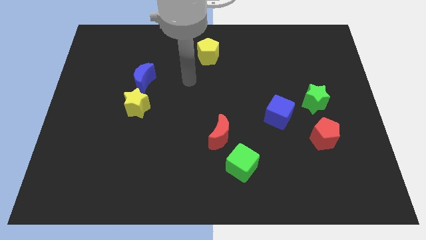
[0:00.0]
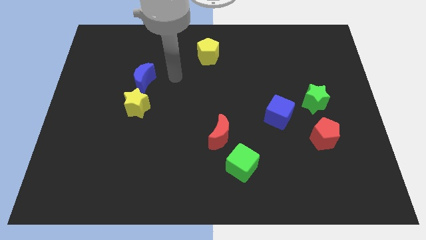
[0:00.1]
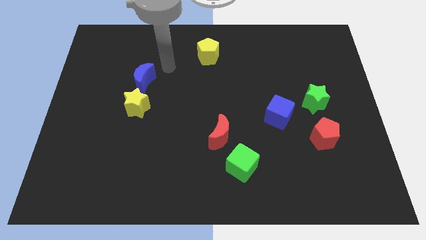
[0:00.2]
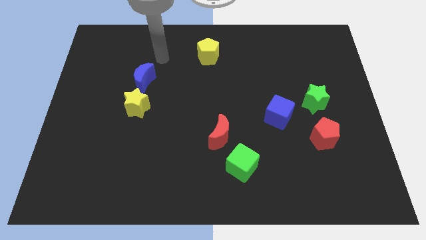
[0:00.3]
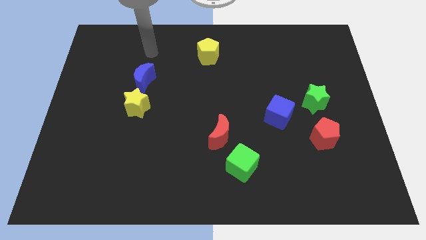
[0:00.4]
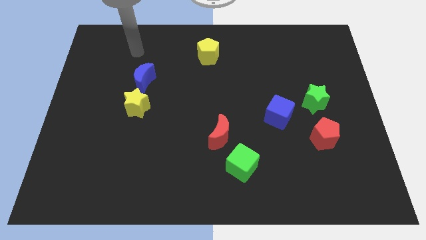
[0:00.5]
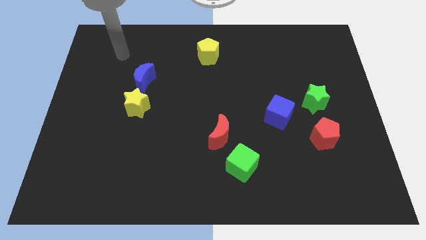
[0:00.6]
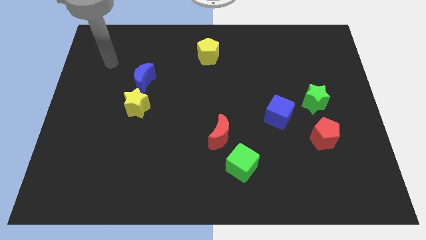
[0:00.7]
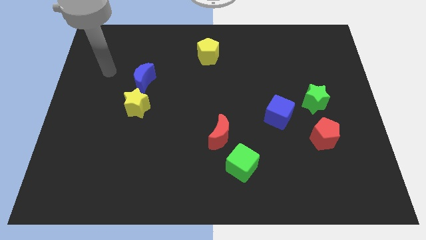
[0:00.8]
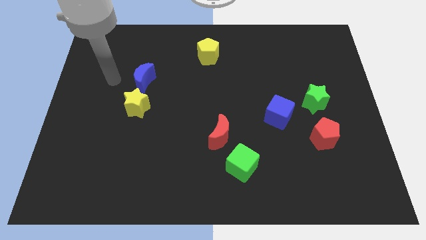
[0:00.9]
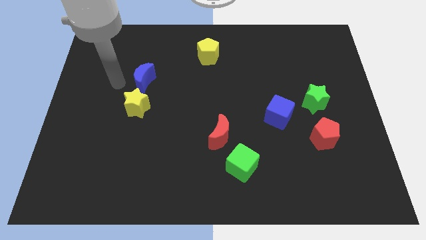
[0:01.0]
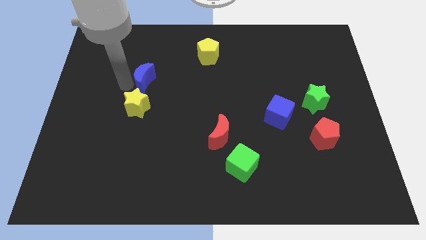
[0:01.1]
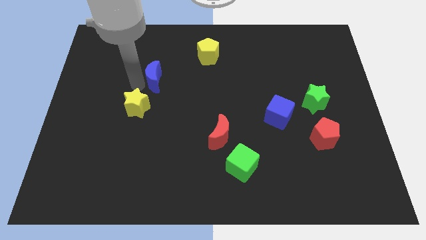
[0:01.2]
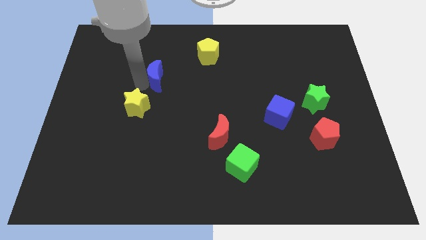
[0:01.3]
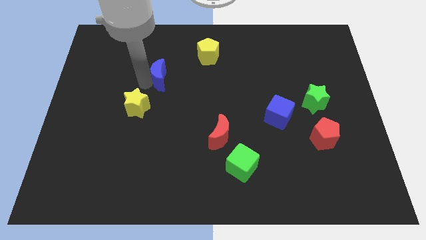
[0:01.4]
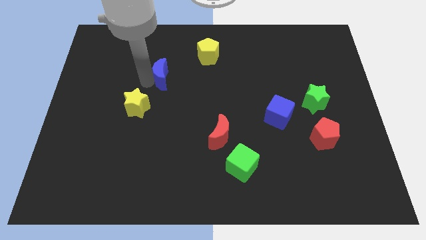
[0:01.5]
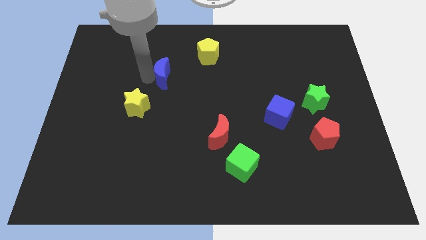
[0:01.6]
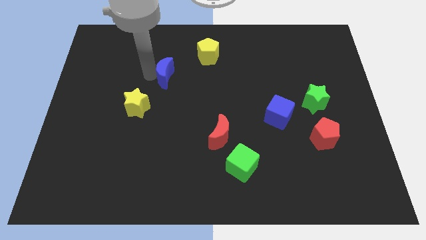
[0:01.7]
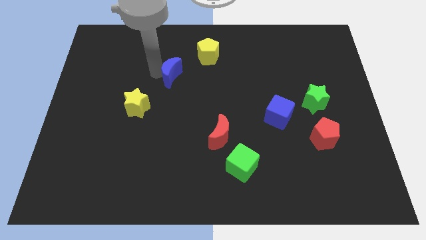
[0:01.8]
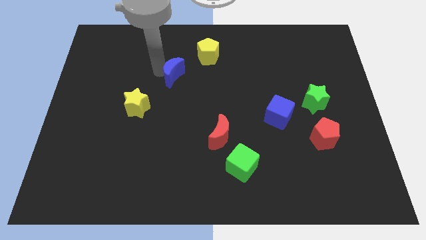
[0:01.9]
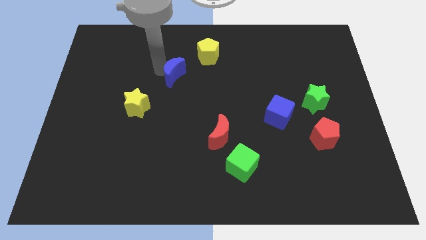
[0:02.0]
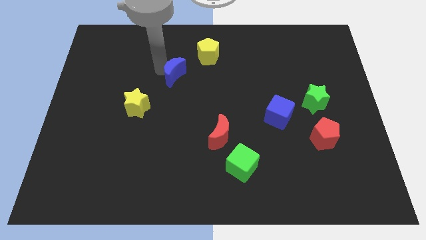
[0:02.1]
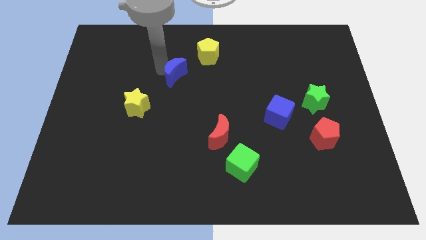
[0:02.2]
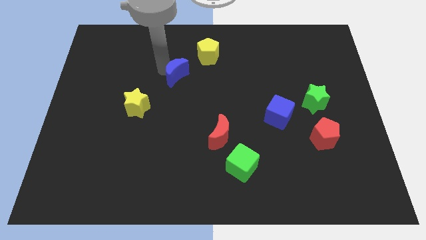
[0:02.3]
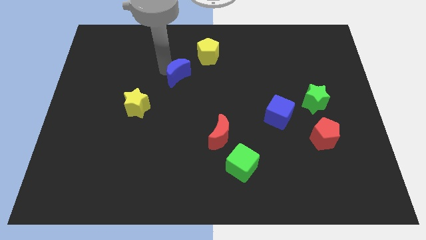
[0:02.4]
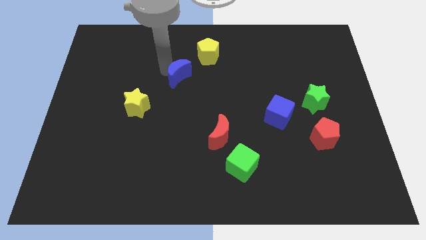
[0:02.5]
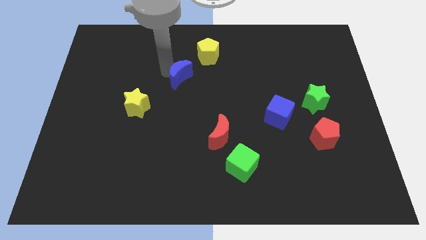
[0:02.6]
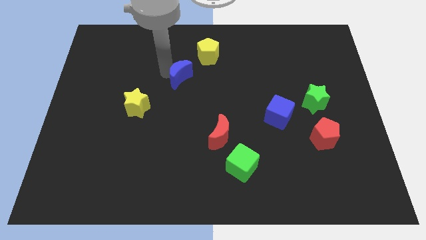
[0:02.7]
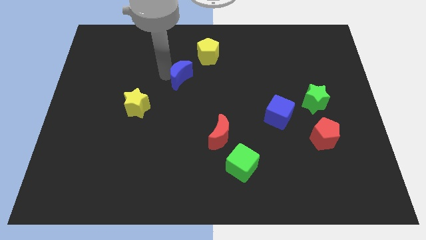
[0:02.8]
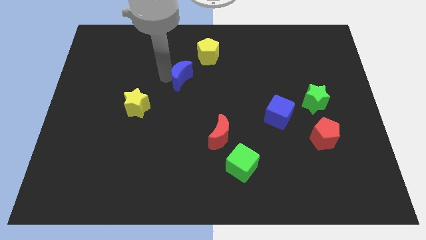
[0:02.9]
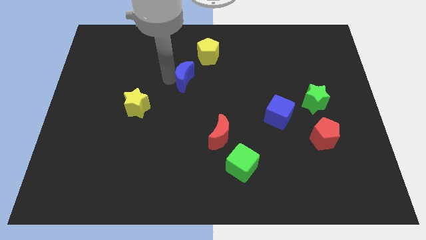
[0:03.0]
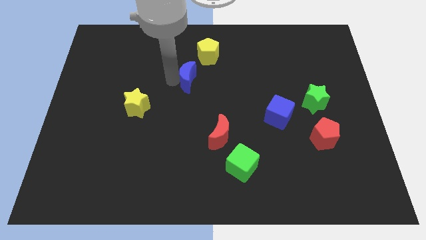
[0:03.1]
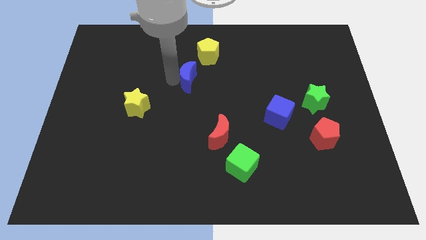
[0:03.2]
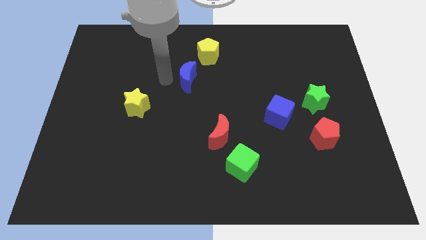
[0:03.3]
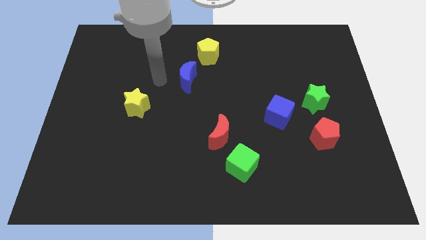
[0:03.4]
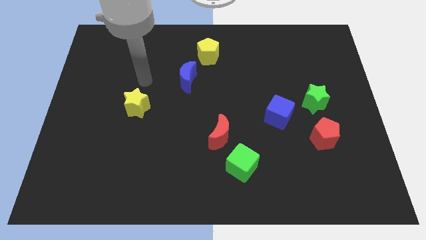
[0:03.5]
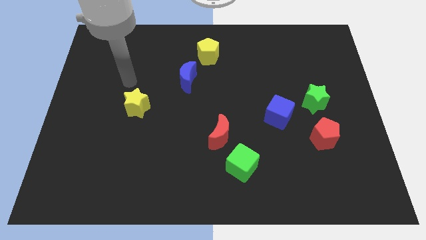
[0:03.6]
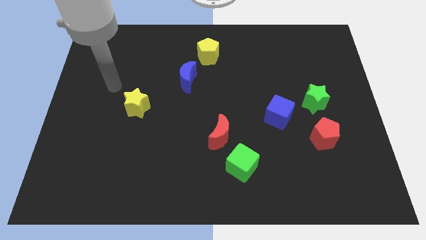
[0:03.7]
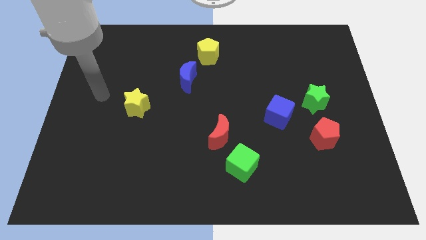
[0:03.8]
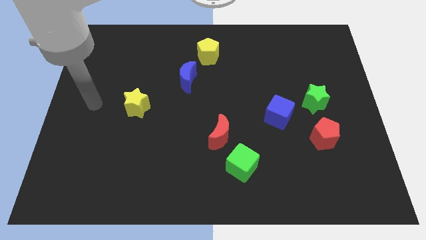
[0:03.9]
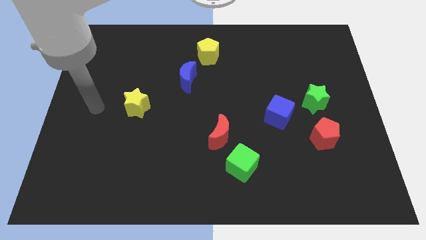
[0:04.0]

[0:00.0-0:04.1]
side the blue crescent diagonally top right the yellow star

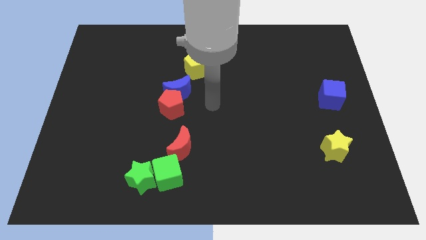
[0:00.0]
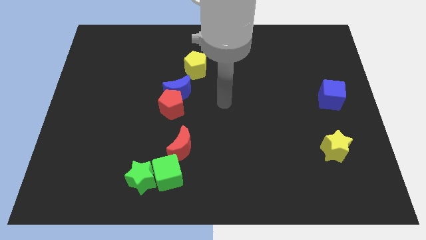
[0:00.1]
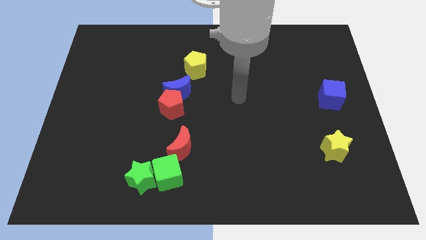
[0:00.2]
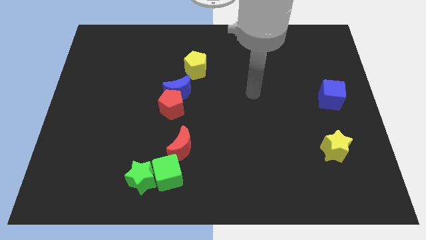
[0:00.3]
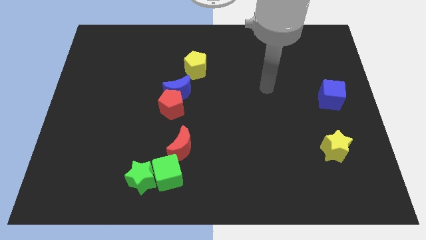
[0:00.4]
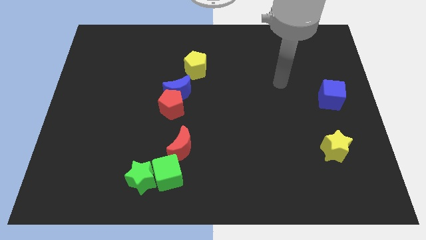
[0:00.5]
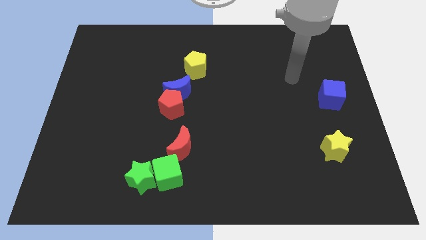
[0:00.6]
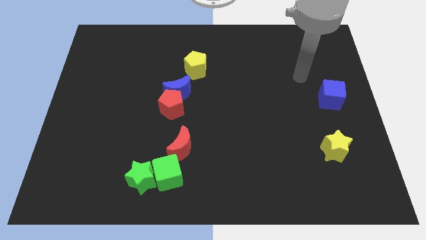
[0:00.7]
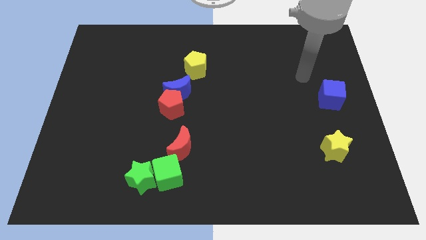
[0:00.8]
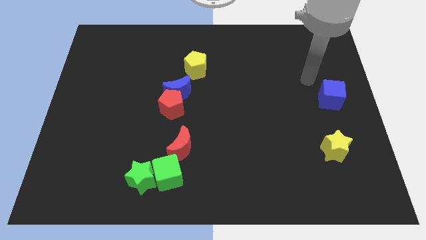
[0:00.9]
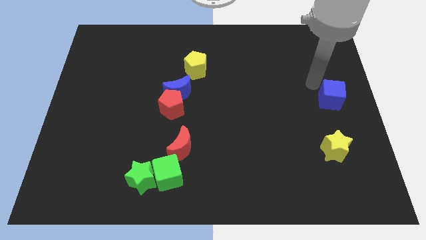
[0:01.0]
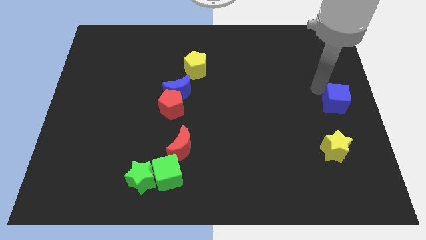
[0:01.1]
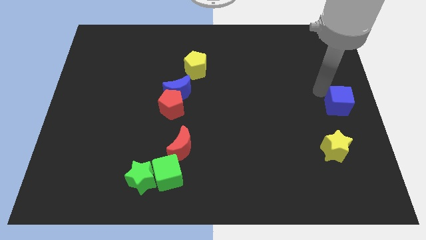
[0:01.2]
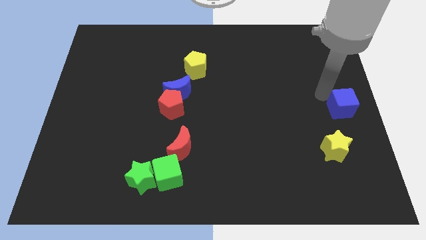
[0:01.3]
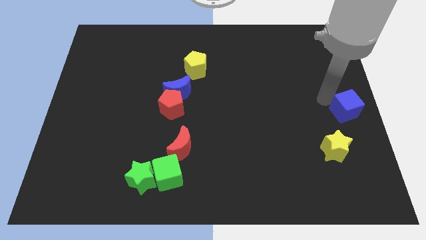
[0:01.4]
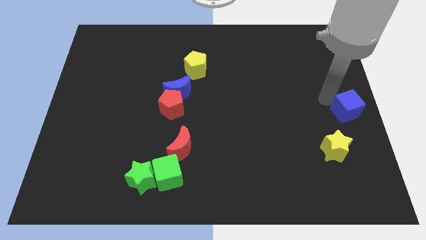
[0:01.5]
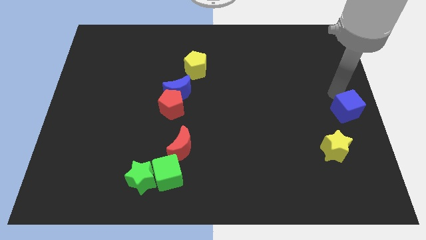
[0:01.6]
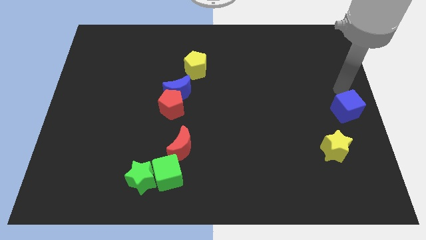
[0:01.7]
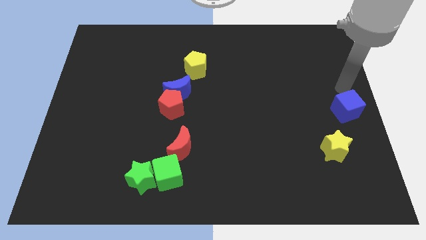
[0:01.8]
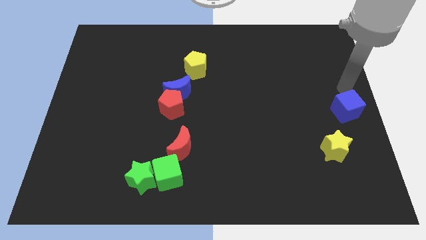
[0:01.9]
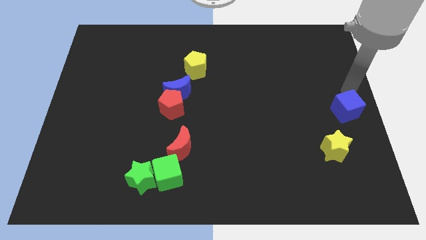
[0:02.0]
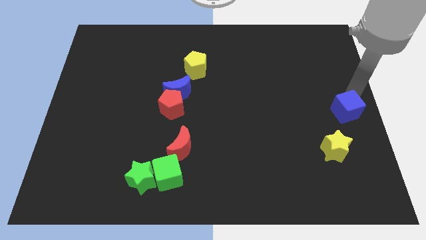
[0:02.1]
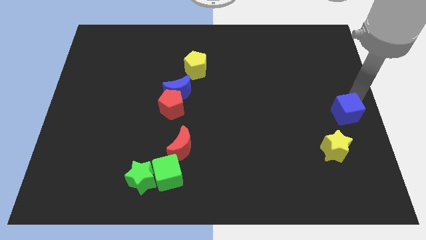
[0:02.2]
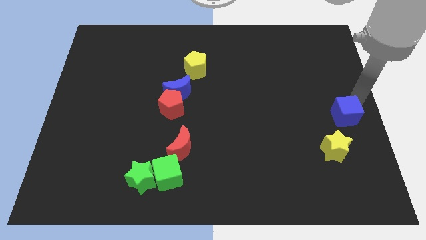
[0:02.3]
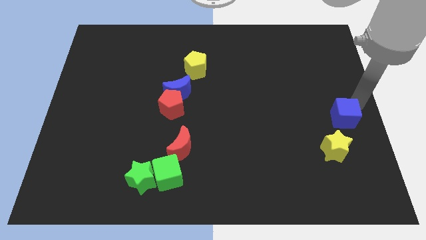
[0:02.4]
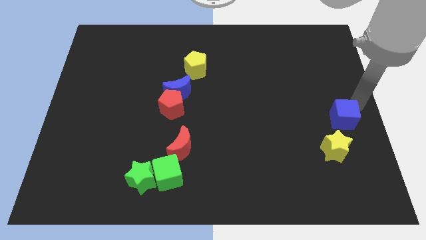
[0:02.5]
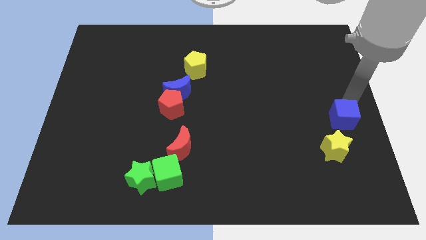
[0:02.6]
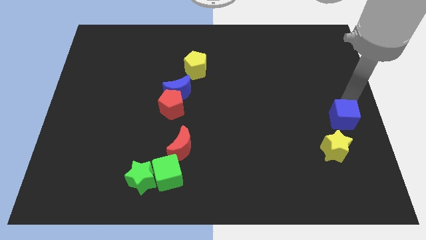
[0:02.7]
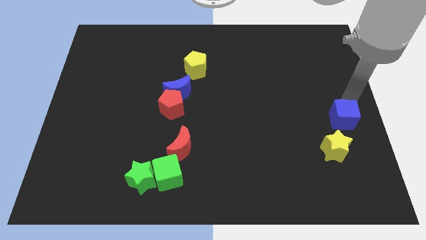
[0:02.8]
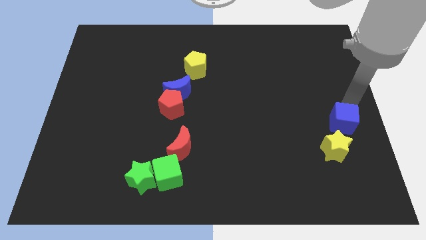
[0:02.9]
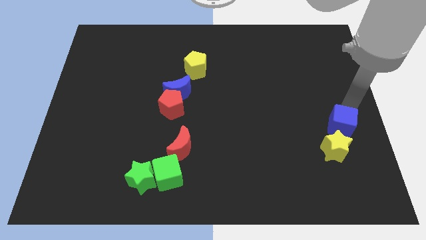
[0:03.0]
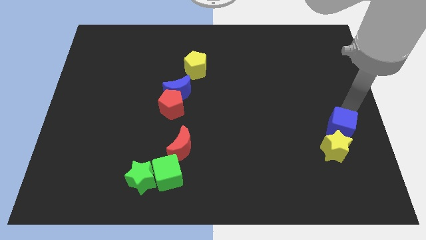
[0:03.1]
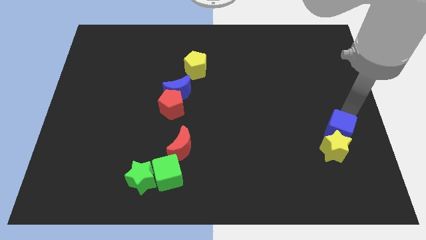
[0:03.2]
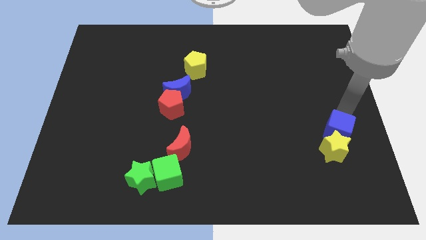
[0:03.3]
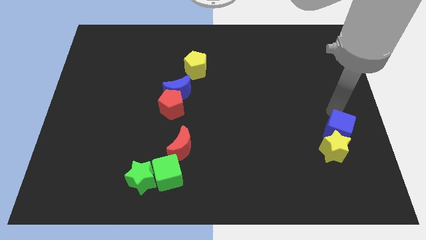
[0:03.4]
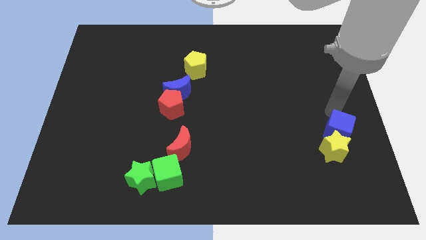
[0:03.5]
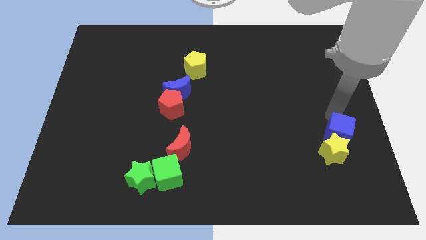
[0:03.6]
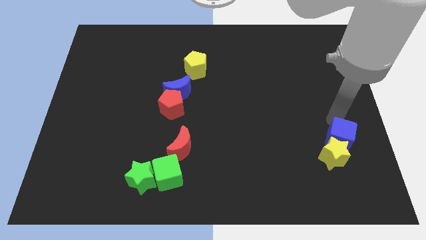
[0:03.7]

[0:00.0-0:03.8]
push the blue cube into the yellow star

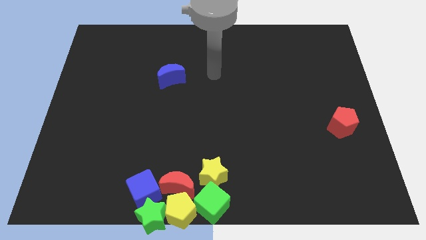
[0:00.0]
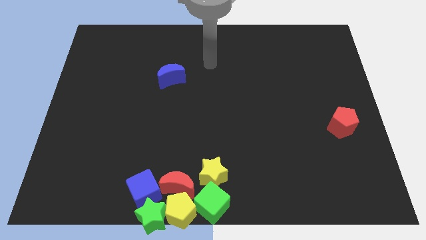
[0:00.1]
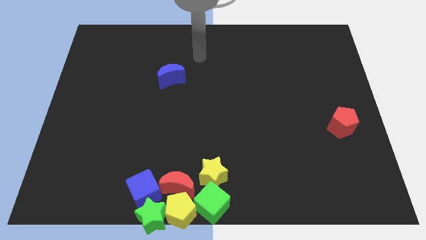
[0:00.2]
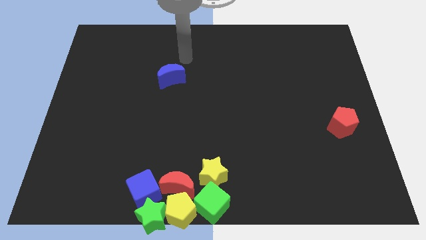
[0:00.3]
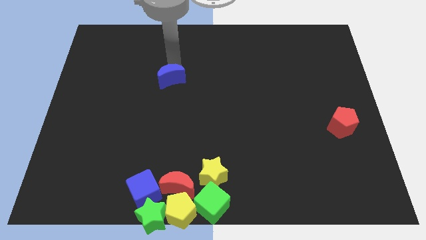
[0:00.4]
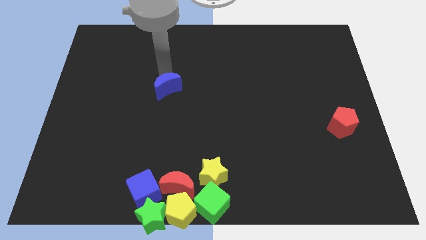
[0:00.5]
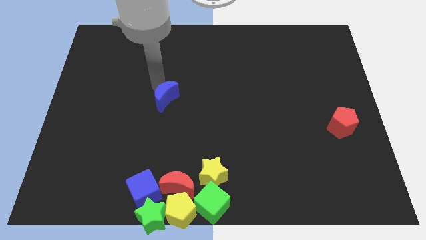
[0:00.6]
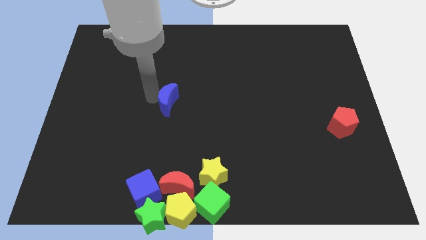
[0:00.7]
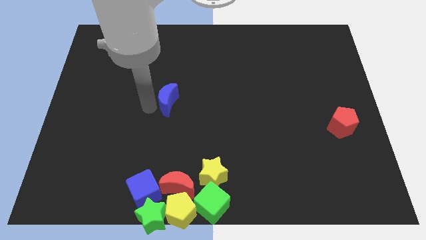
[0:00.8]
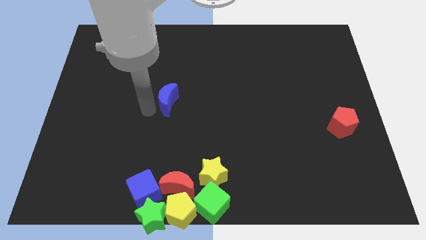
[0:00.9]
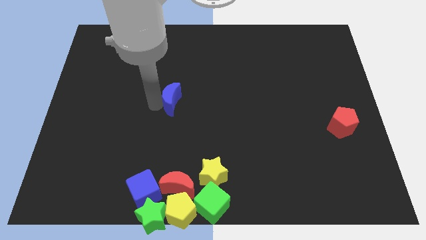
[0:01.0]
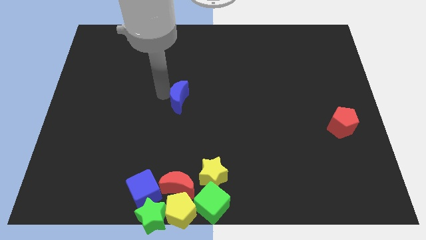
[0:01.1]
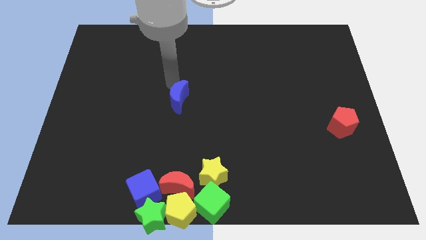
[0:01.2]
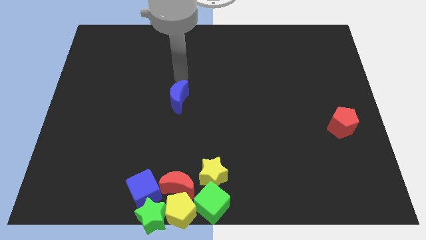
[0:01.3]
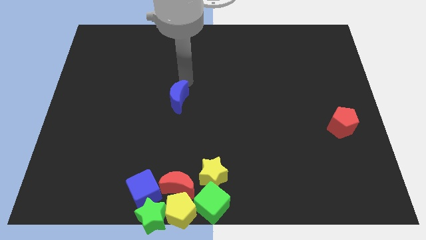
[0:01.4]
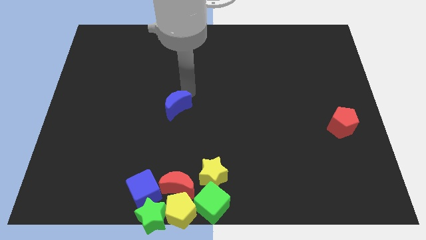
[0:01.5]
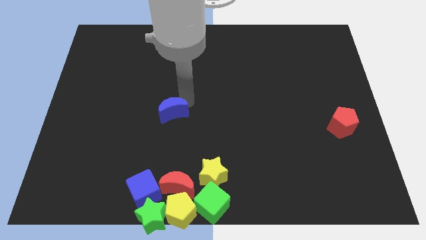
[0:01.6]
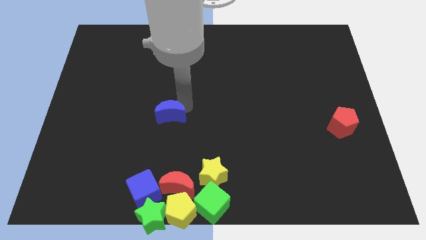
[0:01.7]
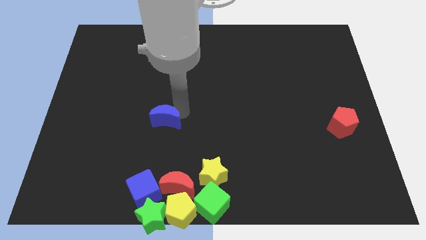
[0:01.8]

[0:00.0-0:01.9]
push the blue crescent horizontally to the left side of the red pentagon
